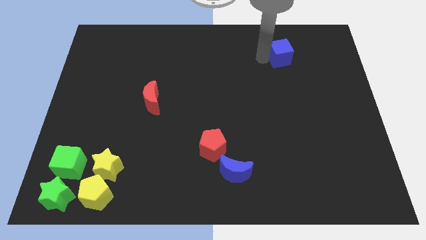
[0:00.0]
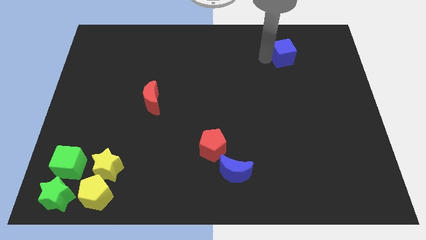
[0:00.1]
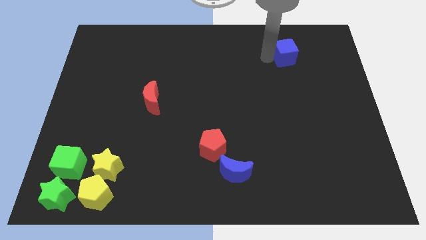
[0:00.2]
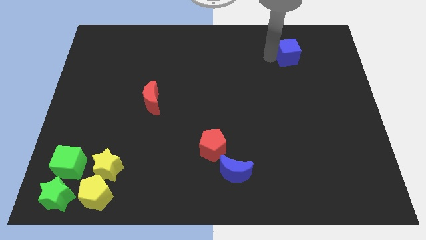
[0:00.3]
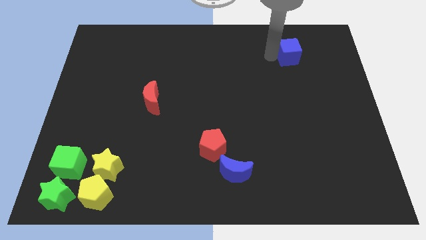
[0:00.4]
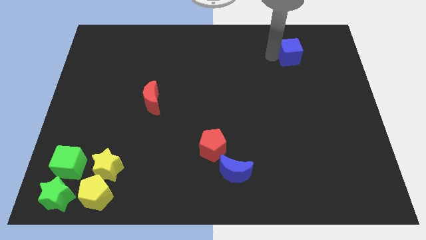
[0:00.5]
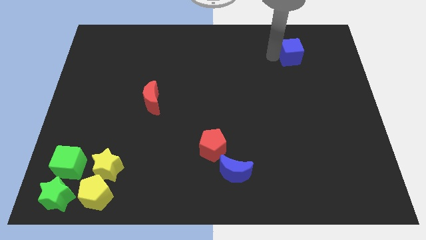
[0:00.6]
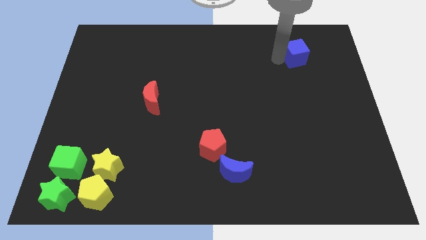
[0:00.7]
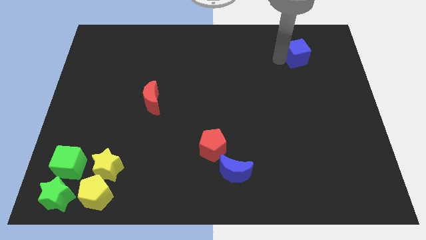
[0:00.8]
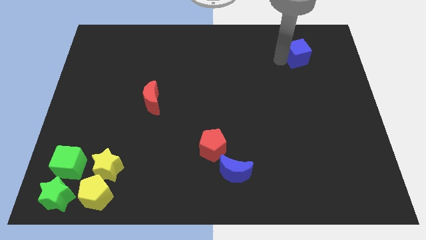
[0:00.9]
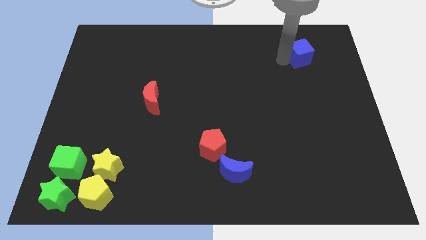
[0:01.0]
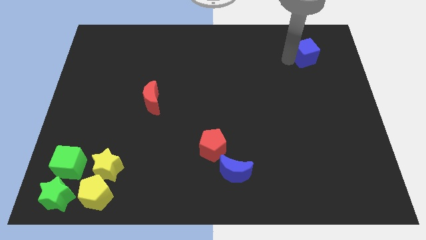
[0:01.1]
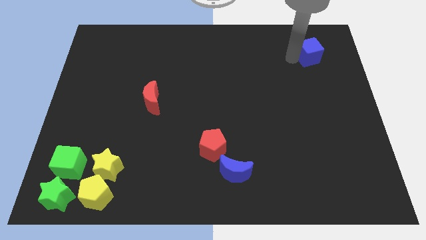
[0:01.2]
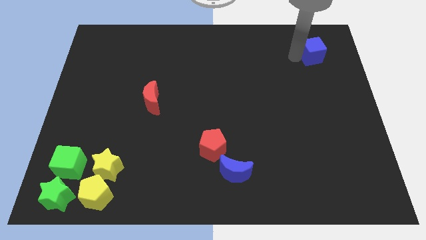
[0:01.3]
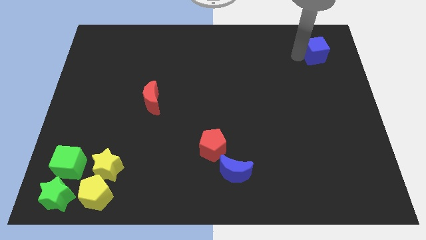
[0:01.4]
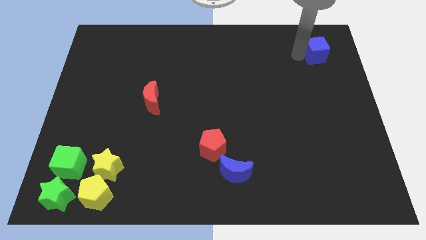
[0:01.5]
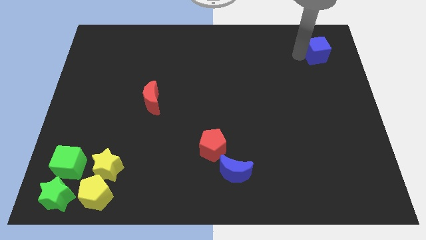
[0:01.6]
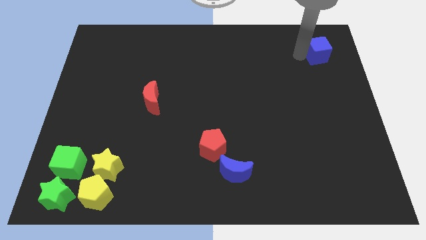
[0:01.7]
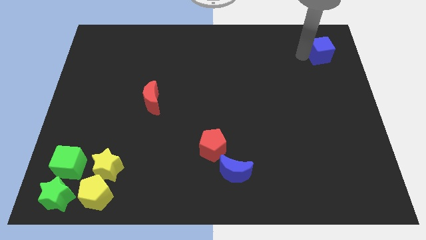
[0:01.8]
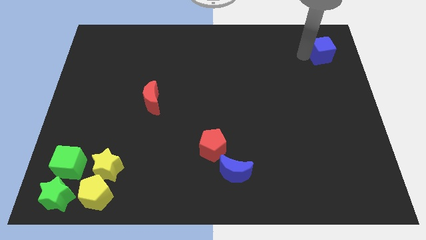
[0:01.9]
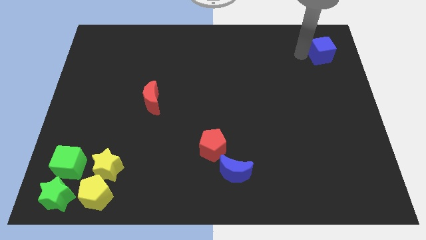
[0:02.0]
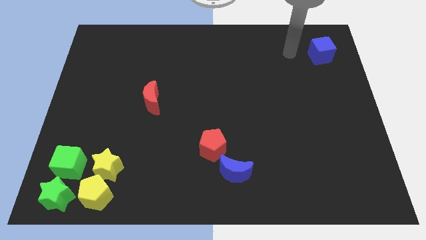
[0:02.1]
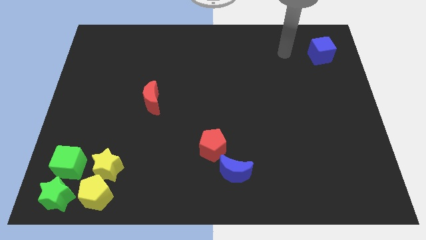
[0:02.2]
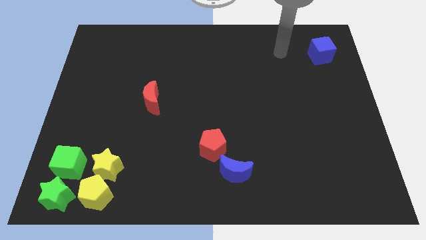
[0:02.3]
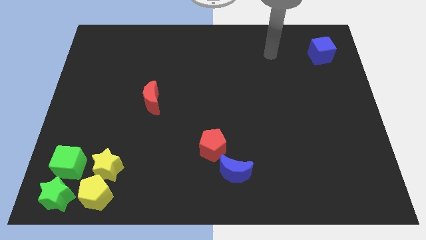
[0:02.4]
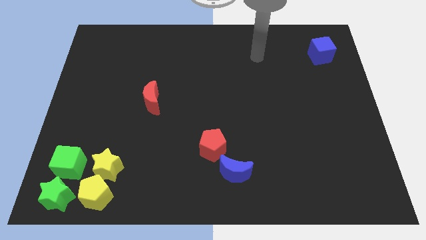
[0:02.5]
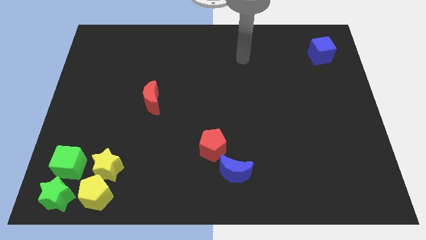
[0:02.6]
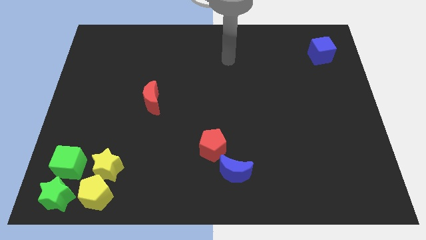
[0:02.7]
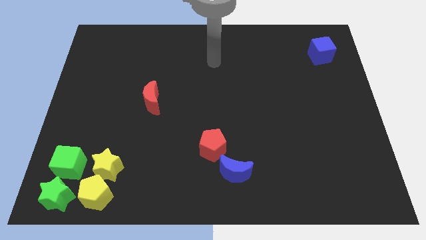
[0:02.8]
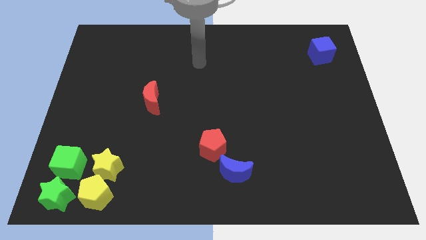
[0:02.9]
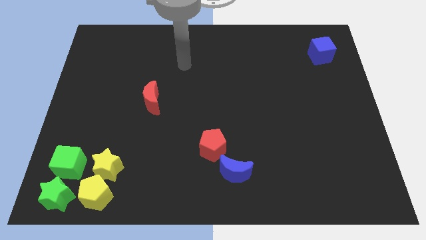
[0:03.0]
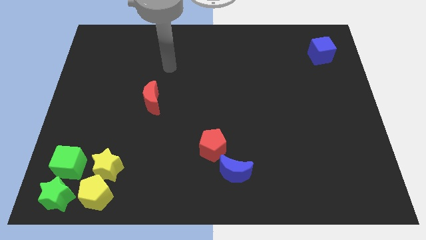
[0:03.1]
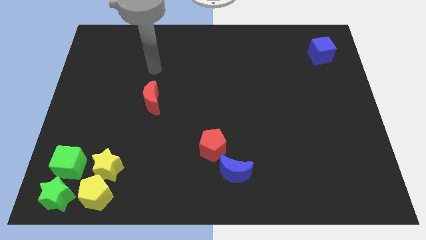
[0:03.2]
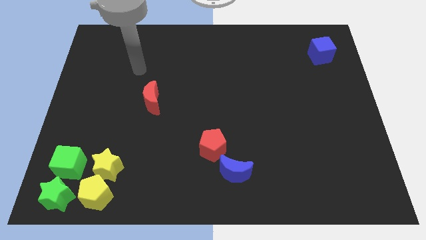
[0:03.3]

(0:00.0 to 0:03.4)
place blue cube to the top right

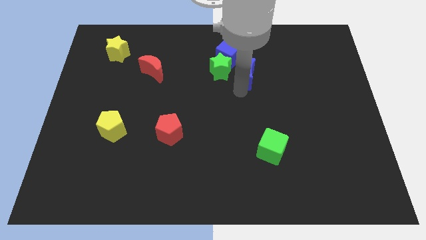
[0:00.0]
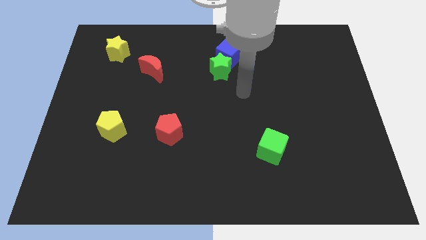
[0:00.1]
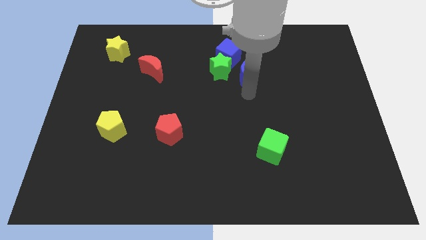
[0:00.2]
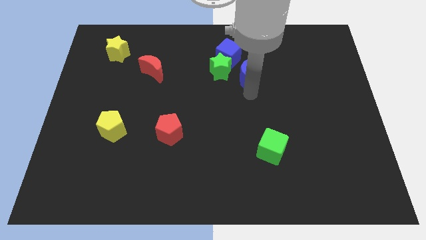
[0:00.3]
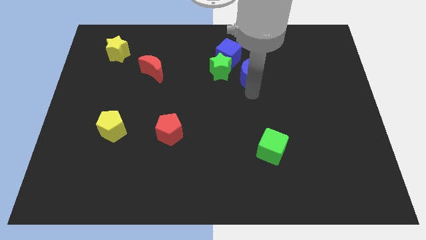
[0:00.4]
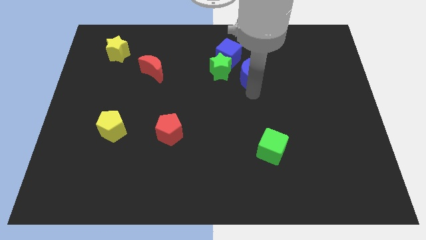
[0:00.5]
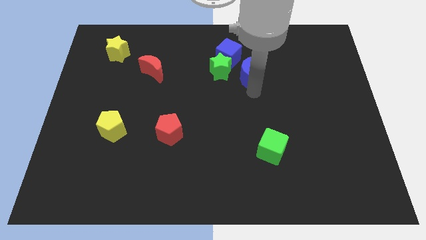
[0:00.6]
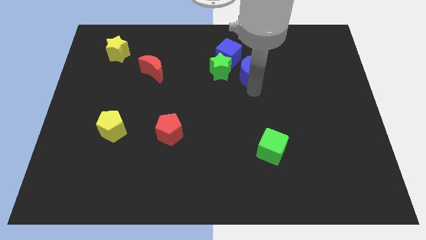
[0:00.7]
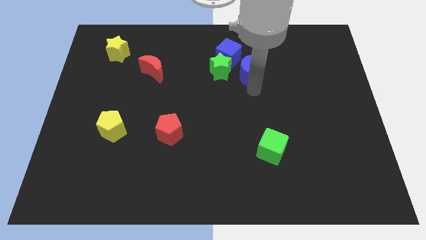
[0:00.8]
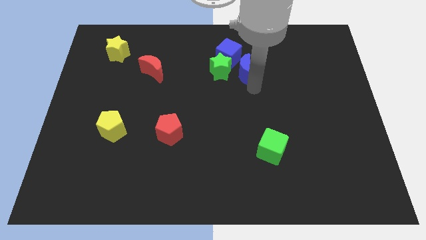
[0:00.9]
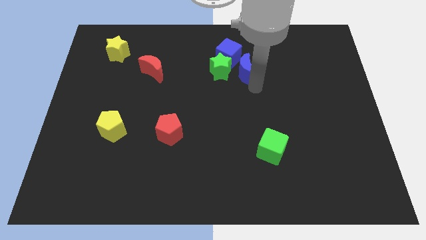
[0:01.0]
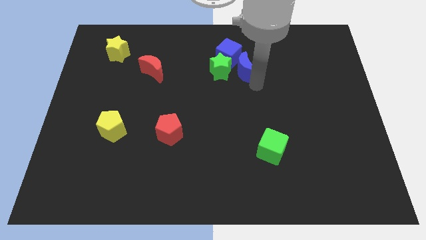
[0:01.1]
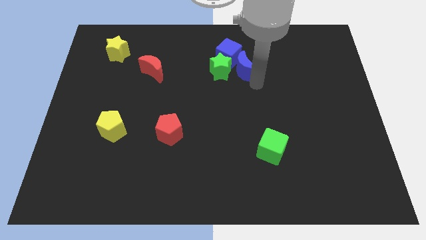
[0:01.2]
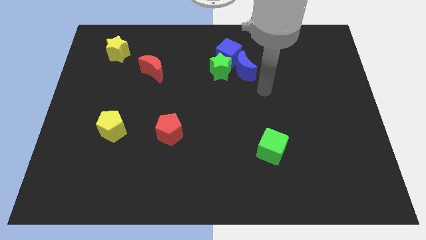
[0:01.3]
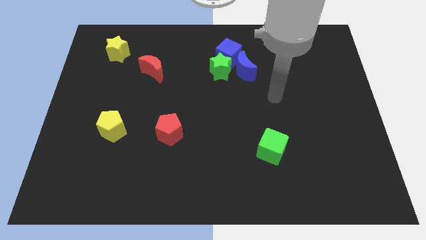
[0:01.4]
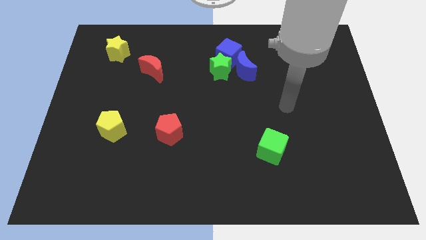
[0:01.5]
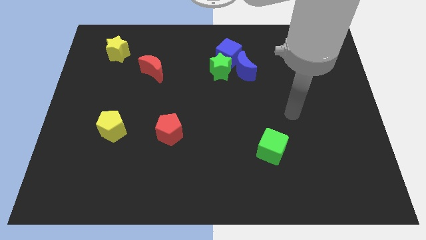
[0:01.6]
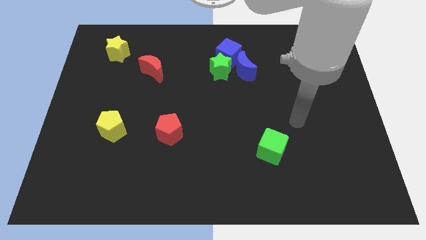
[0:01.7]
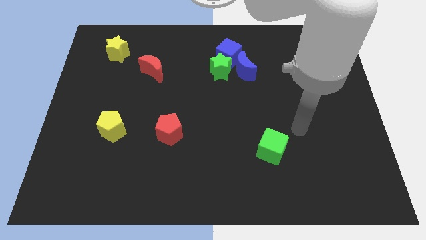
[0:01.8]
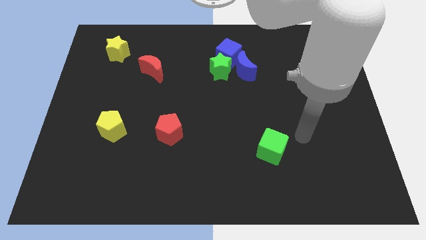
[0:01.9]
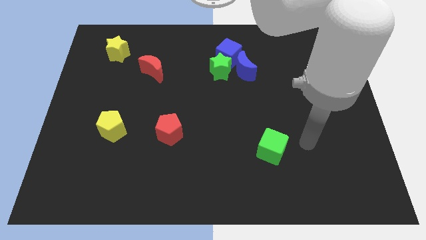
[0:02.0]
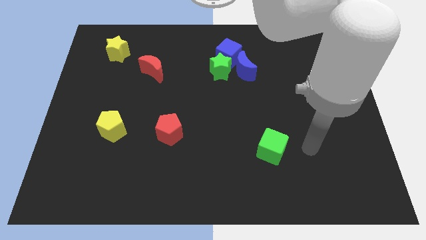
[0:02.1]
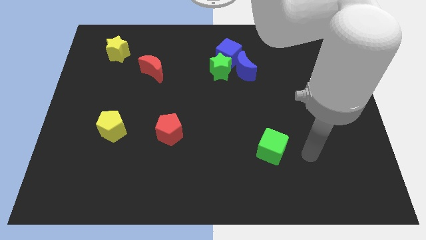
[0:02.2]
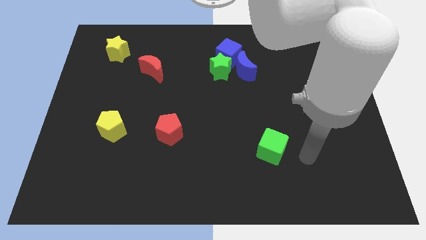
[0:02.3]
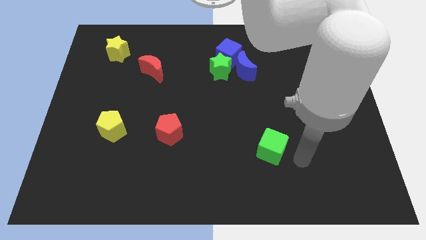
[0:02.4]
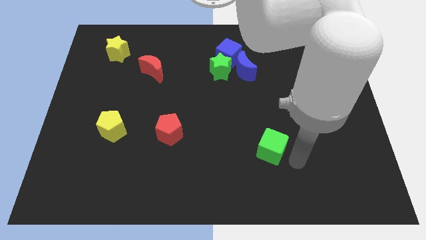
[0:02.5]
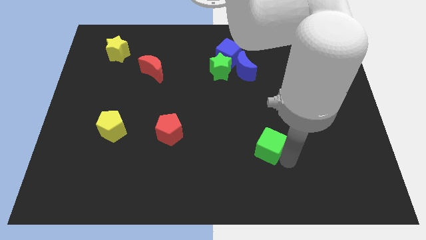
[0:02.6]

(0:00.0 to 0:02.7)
place the arm right to the green cube

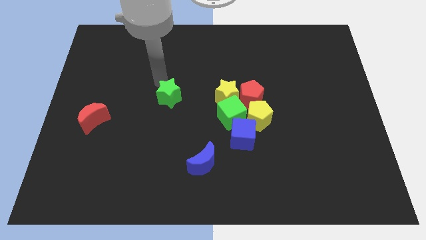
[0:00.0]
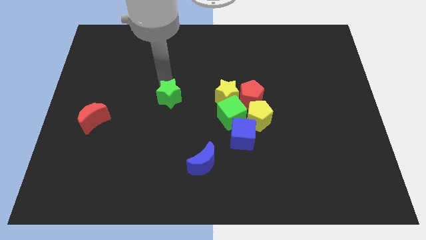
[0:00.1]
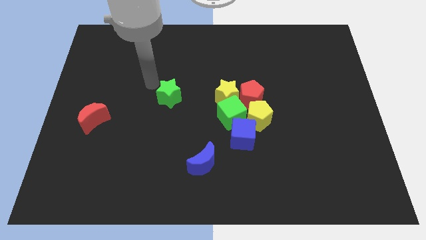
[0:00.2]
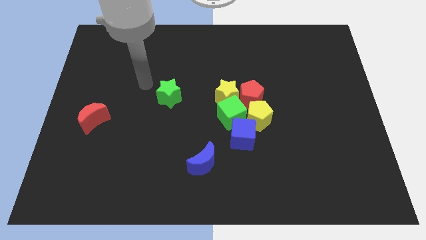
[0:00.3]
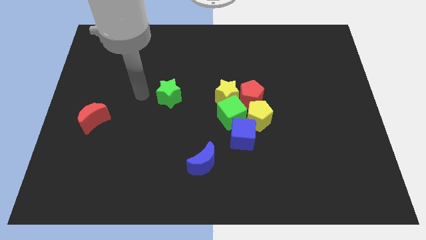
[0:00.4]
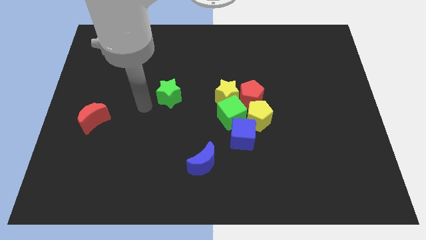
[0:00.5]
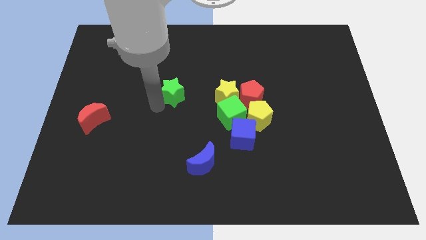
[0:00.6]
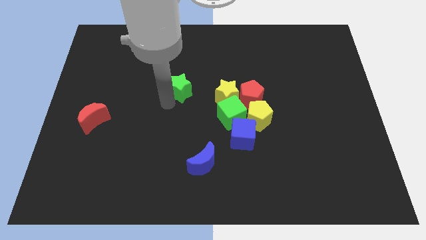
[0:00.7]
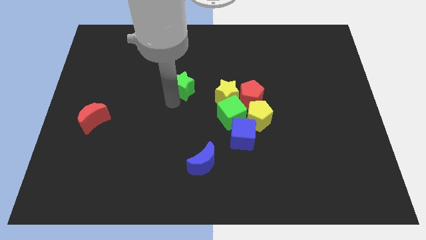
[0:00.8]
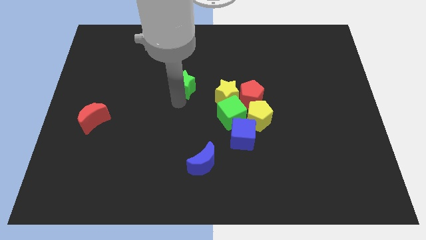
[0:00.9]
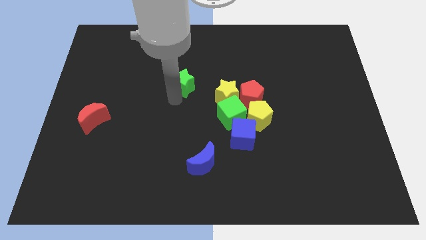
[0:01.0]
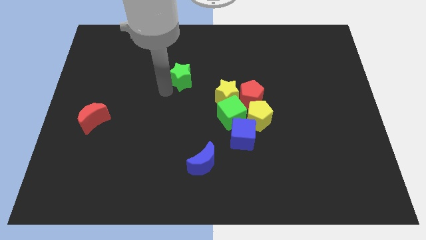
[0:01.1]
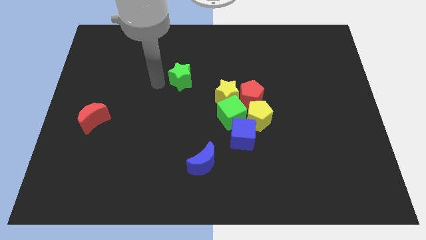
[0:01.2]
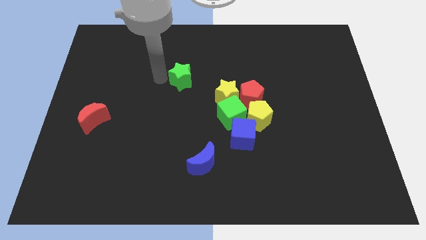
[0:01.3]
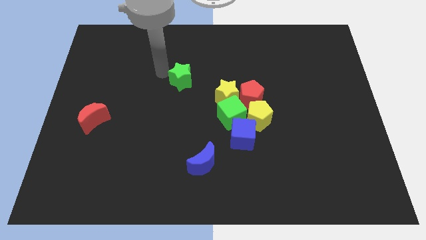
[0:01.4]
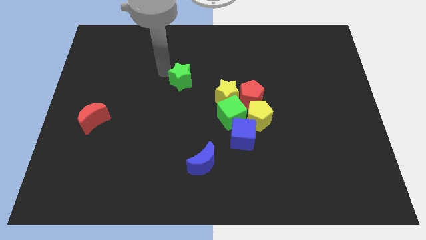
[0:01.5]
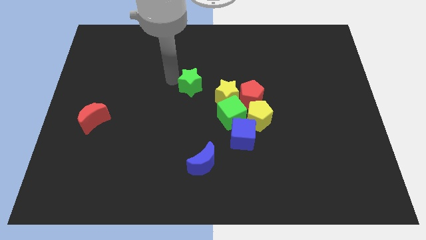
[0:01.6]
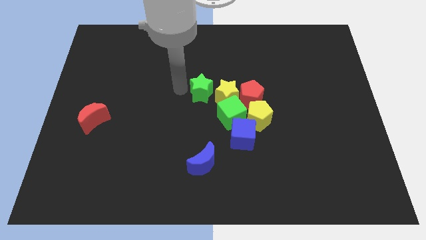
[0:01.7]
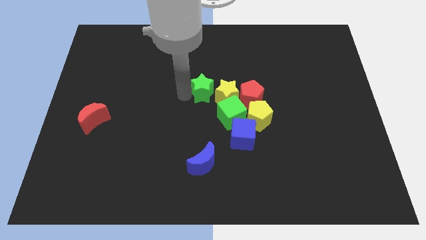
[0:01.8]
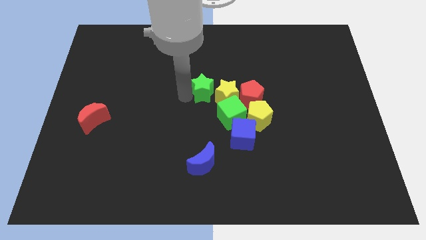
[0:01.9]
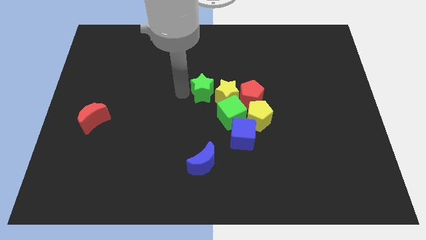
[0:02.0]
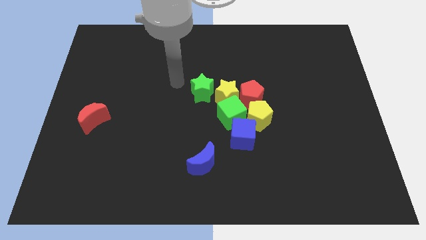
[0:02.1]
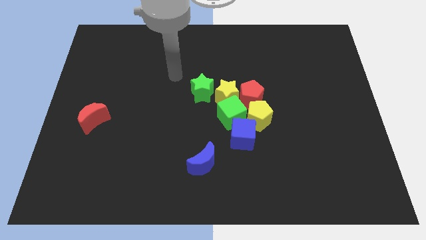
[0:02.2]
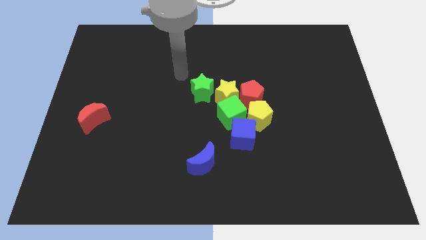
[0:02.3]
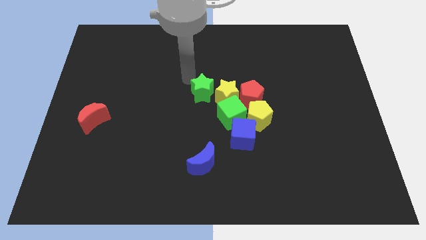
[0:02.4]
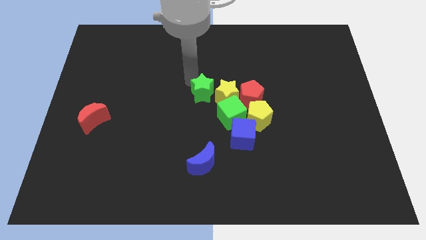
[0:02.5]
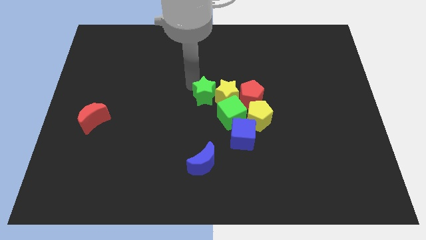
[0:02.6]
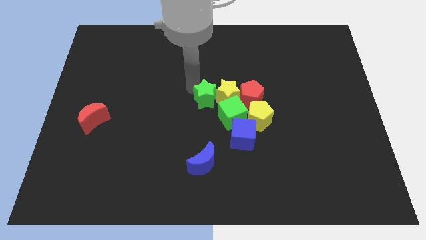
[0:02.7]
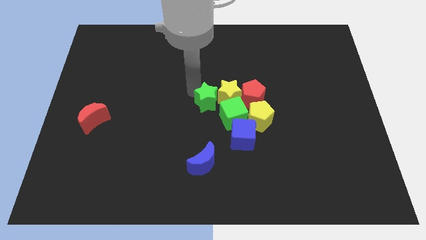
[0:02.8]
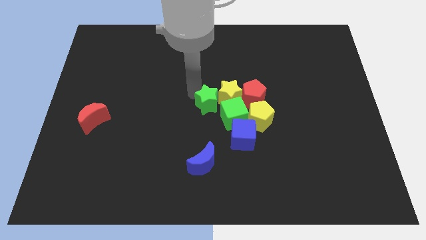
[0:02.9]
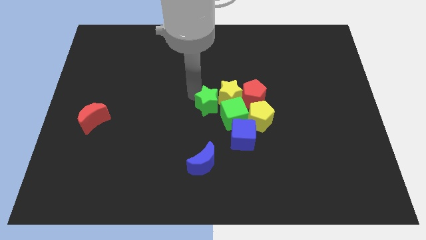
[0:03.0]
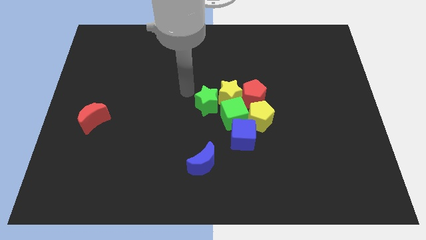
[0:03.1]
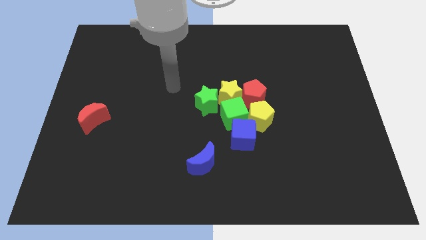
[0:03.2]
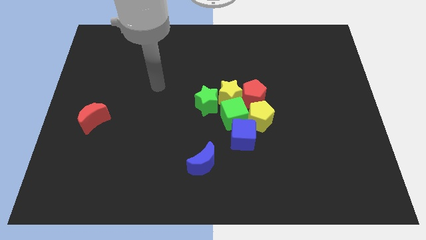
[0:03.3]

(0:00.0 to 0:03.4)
push the green star into left of the yellow star
